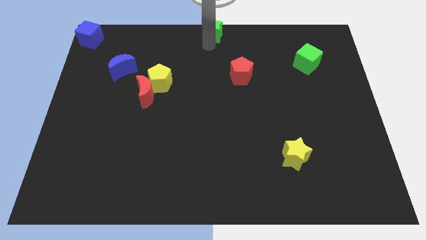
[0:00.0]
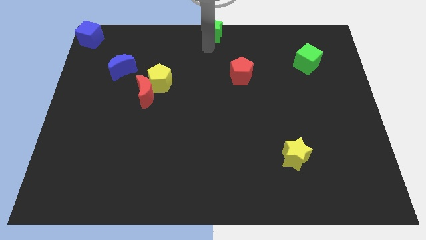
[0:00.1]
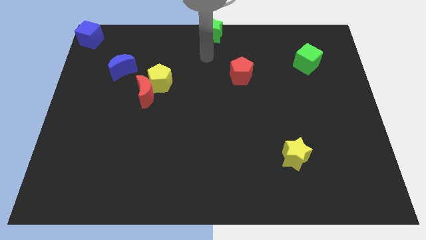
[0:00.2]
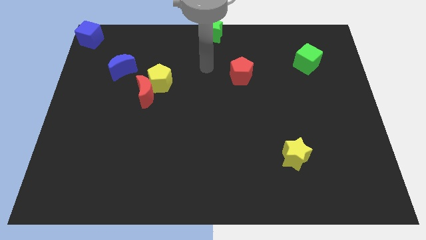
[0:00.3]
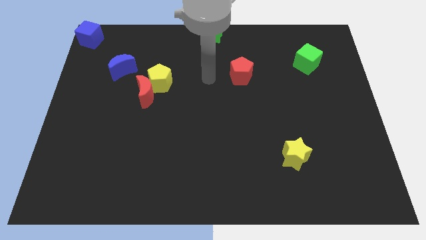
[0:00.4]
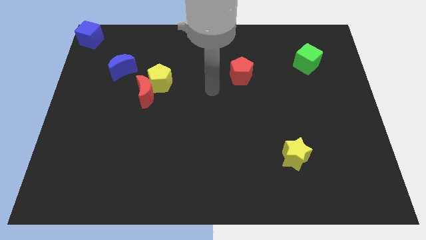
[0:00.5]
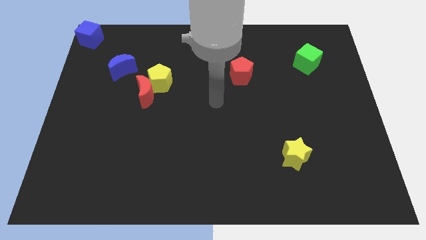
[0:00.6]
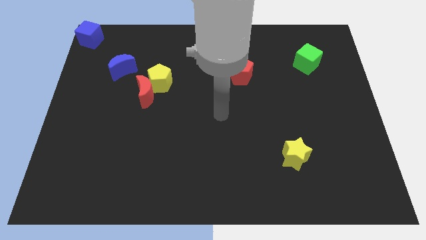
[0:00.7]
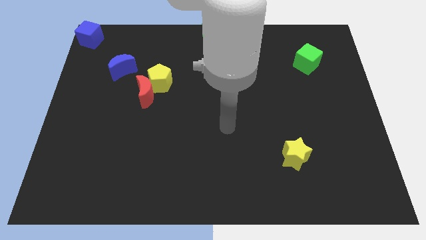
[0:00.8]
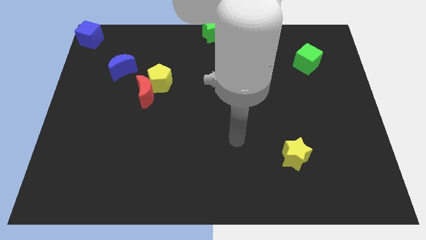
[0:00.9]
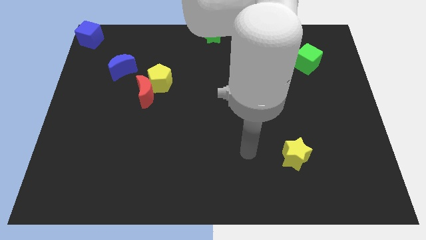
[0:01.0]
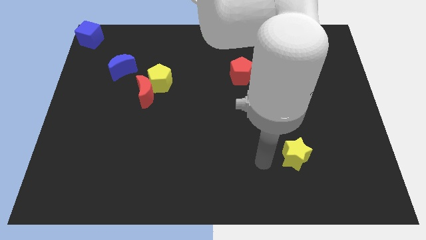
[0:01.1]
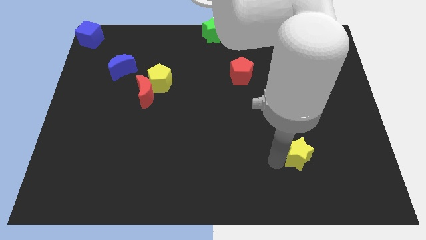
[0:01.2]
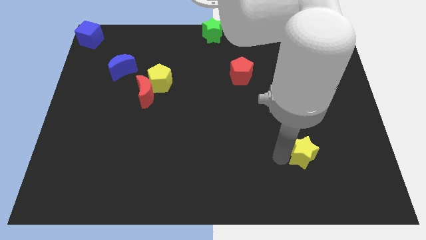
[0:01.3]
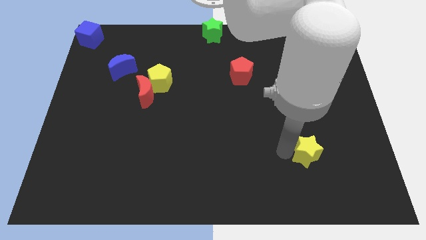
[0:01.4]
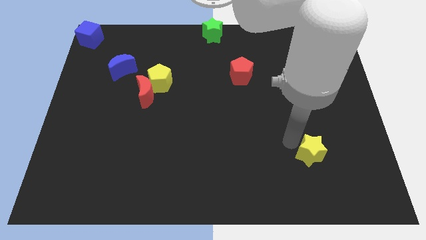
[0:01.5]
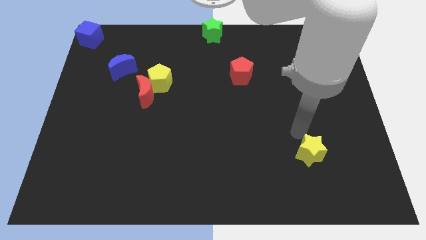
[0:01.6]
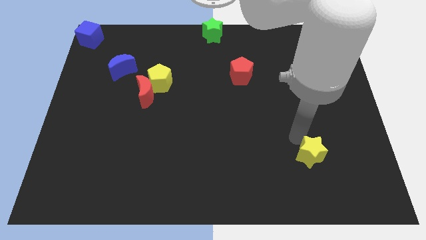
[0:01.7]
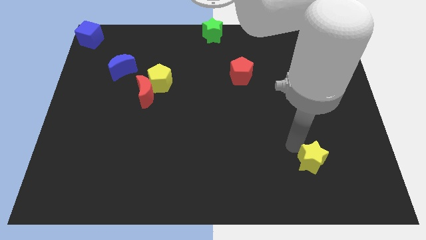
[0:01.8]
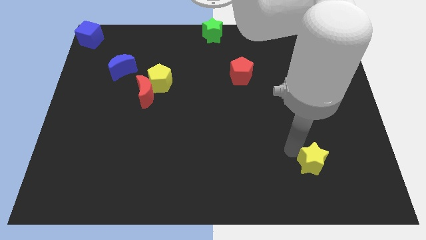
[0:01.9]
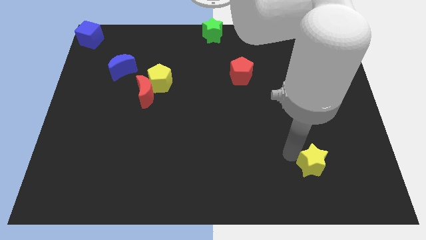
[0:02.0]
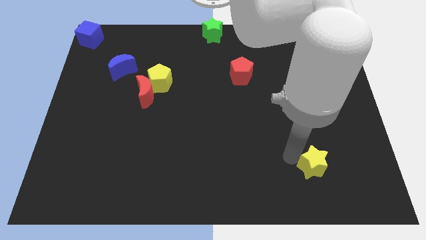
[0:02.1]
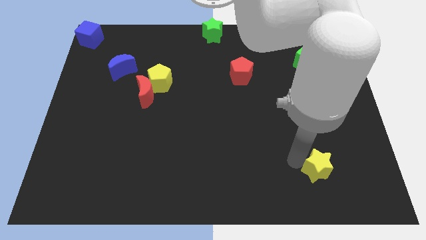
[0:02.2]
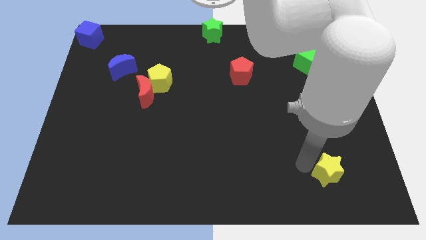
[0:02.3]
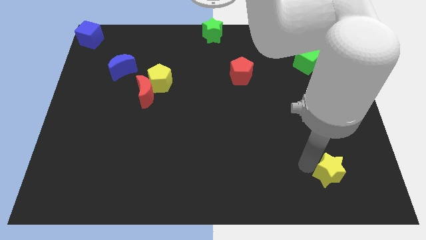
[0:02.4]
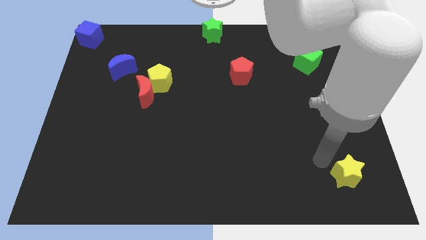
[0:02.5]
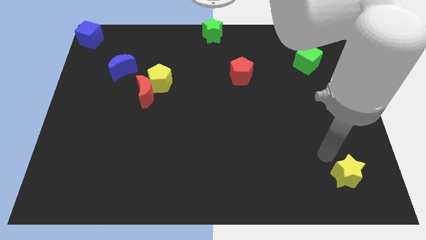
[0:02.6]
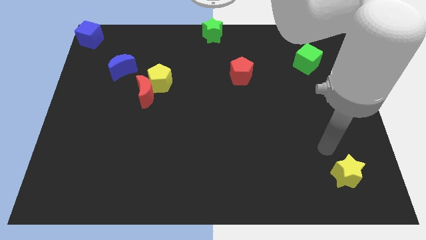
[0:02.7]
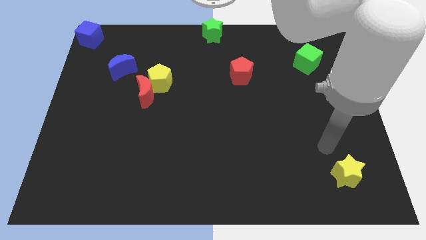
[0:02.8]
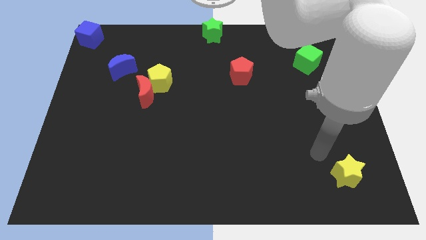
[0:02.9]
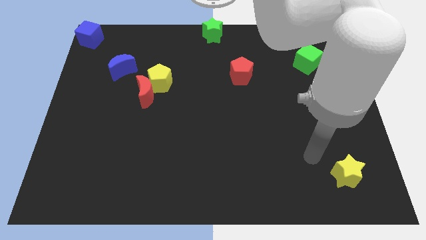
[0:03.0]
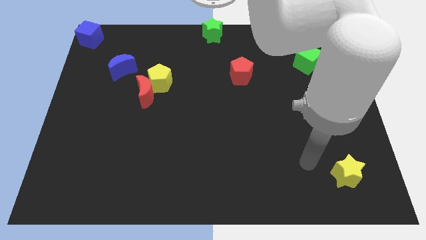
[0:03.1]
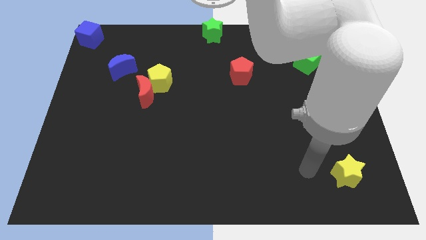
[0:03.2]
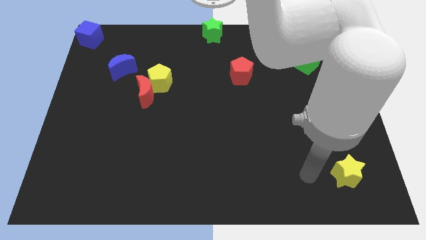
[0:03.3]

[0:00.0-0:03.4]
move your arm left to the yellow star

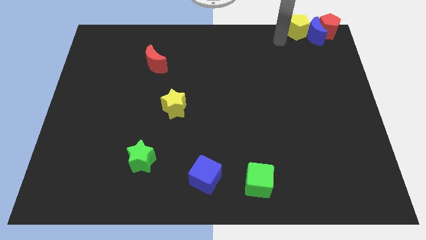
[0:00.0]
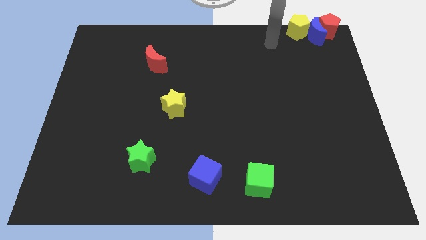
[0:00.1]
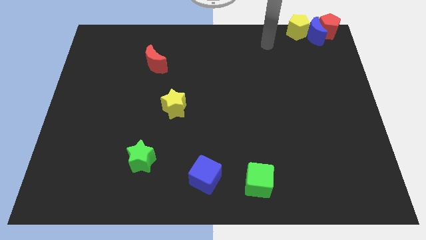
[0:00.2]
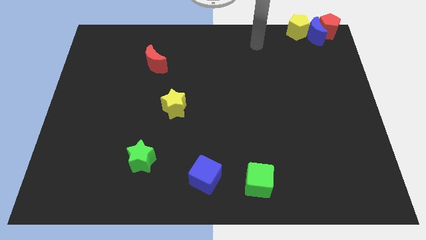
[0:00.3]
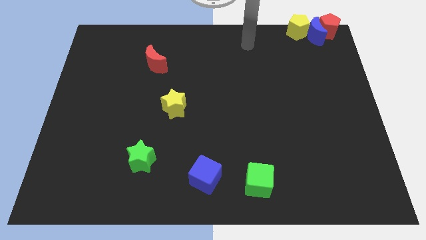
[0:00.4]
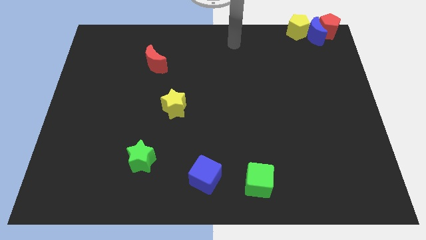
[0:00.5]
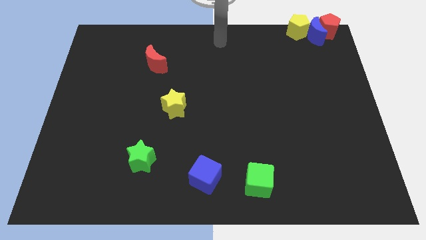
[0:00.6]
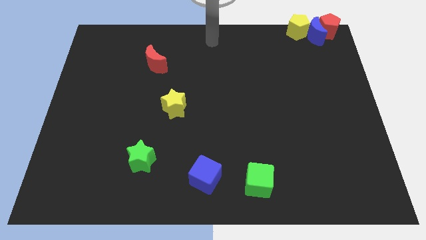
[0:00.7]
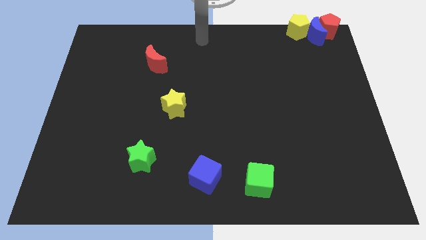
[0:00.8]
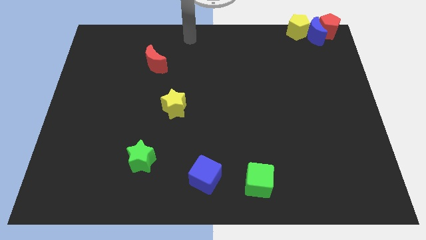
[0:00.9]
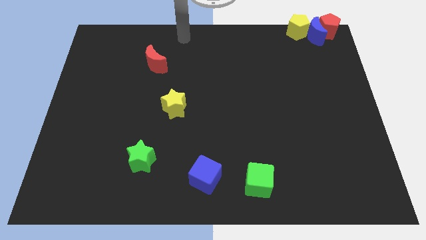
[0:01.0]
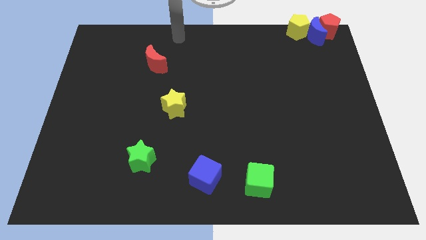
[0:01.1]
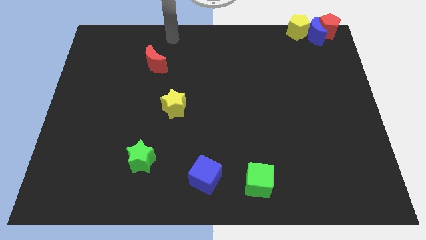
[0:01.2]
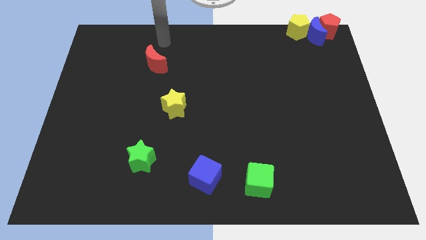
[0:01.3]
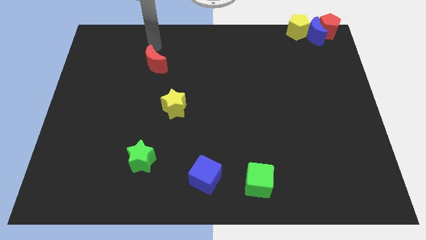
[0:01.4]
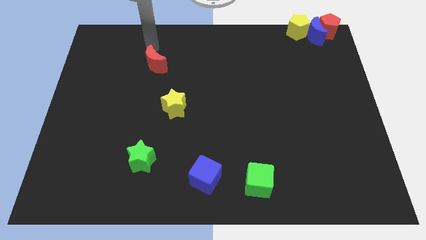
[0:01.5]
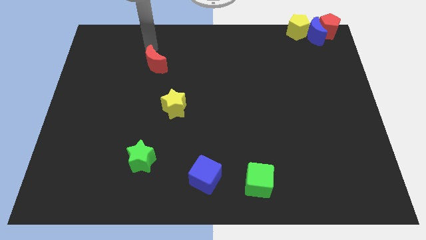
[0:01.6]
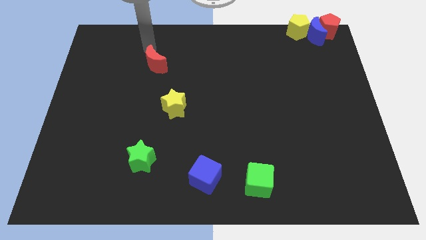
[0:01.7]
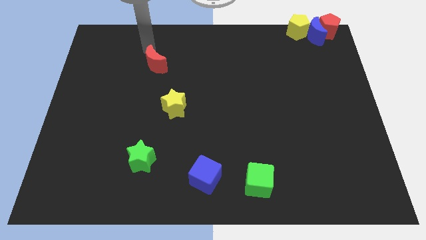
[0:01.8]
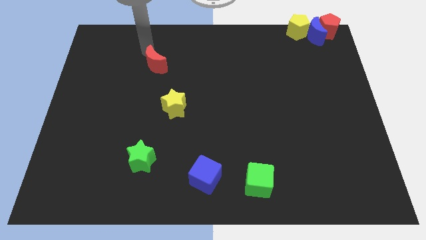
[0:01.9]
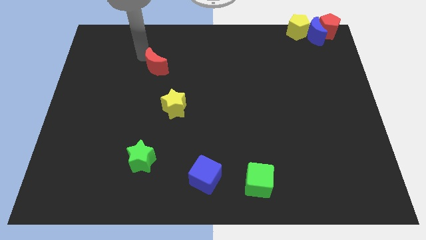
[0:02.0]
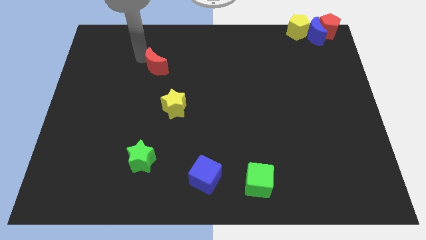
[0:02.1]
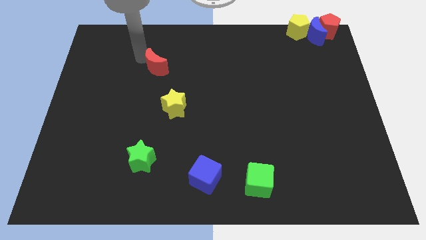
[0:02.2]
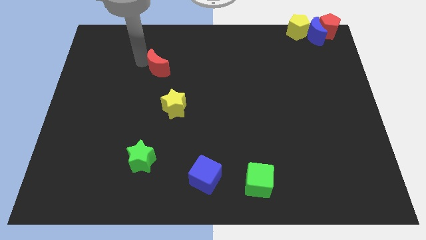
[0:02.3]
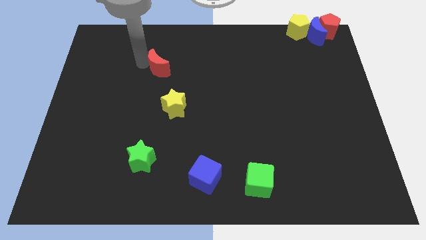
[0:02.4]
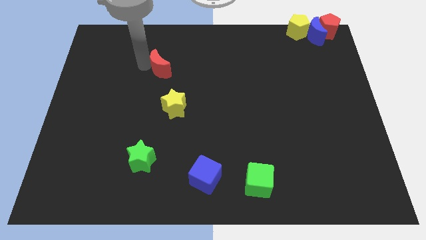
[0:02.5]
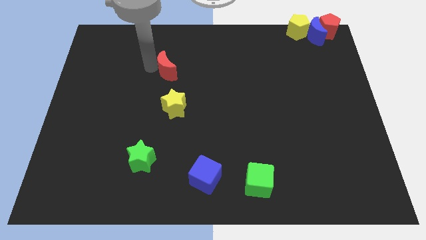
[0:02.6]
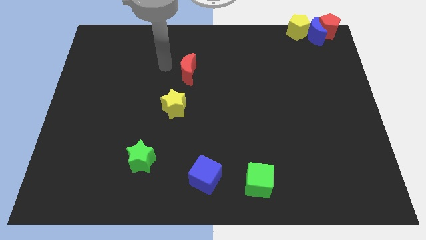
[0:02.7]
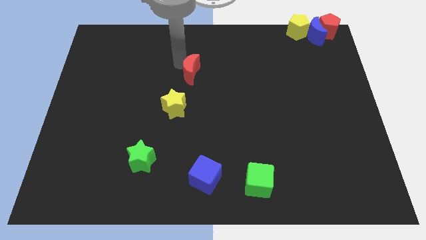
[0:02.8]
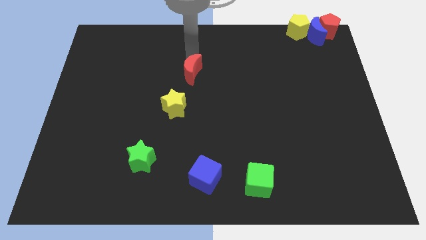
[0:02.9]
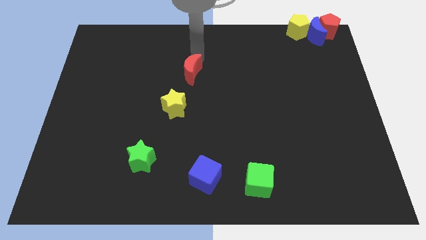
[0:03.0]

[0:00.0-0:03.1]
slide red moon to the top right of yellow star

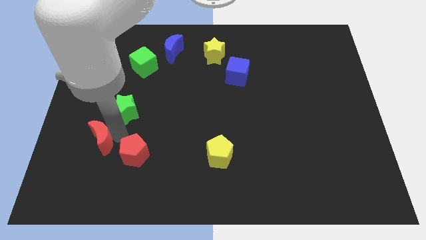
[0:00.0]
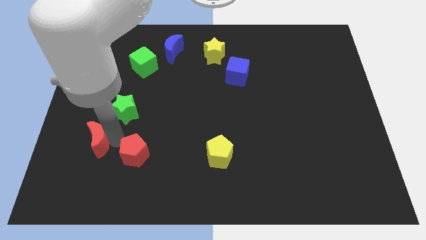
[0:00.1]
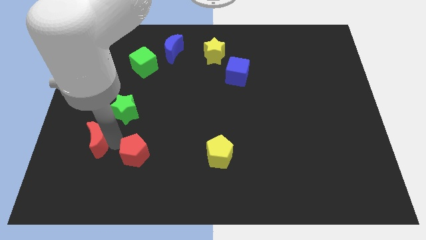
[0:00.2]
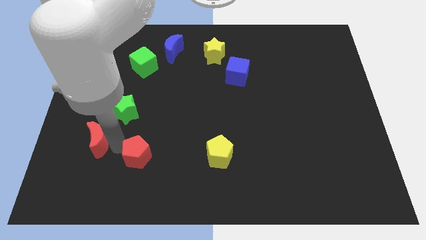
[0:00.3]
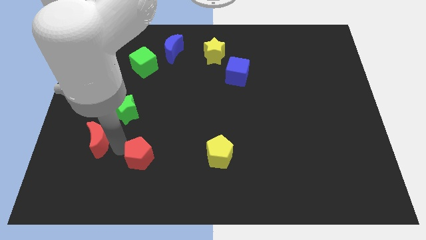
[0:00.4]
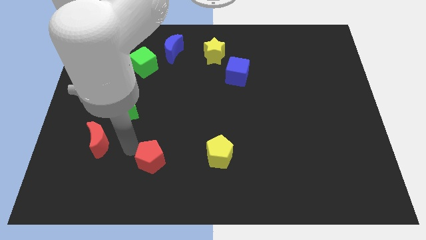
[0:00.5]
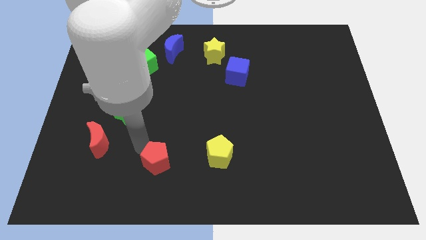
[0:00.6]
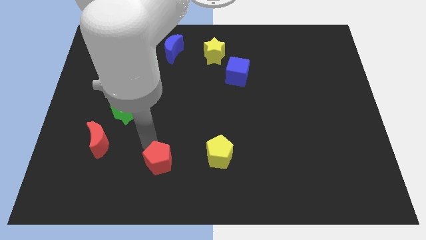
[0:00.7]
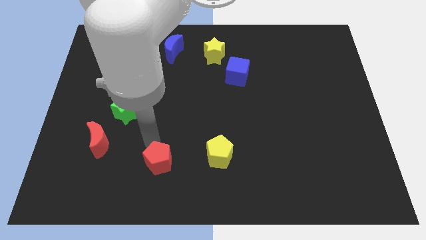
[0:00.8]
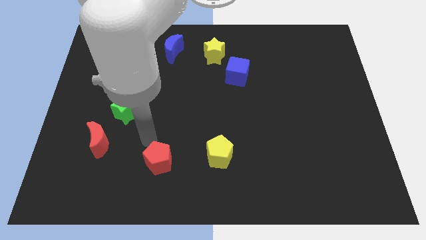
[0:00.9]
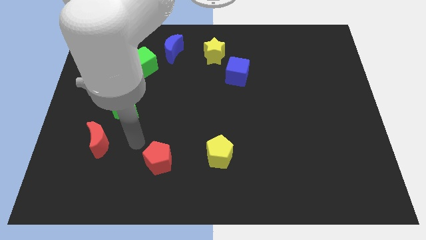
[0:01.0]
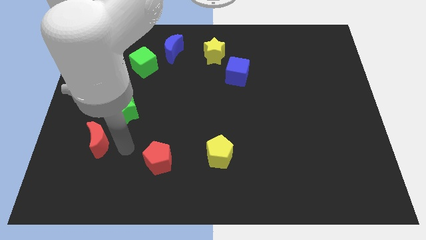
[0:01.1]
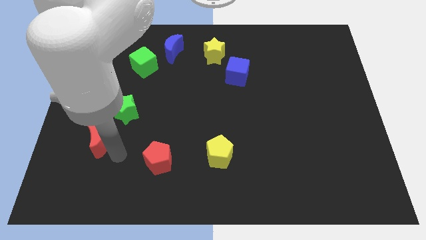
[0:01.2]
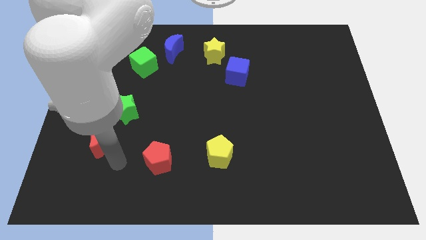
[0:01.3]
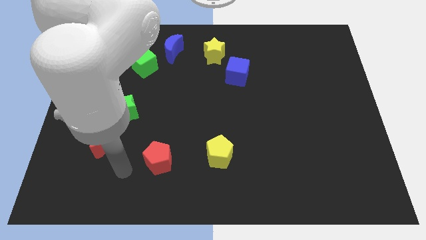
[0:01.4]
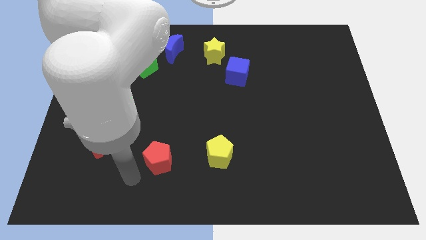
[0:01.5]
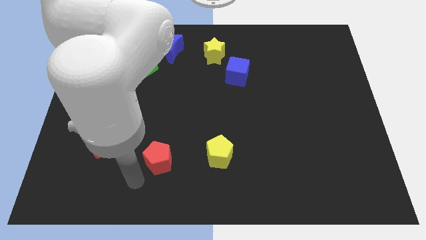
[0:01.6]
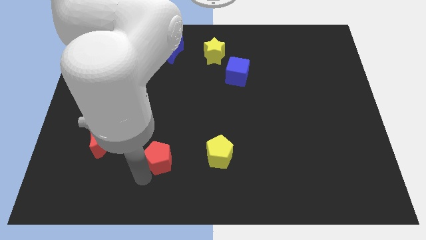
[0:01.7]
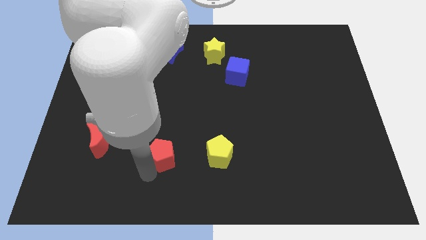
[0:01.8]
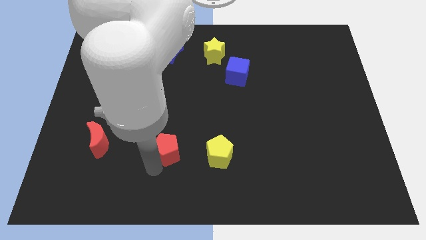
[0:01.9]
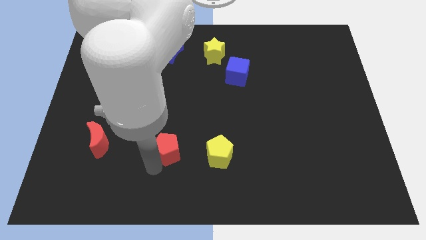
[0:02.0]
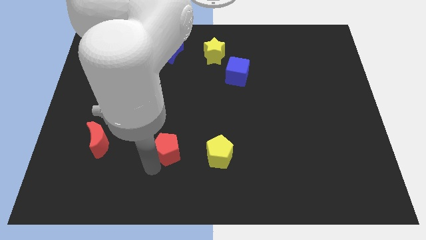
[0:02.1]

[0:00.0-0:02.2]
place red pentagon to the left of yellow pentagon

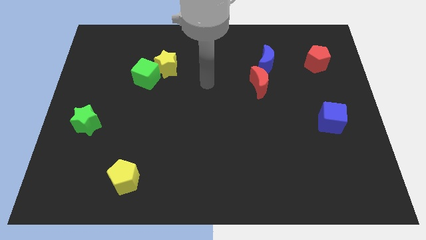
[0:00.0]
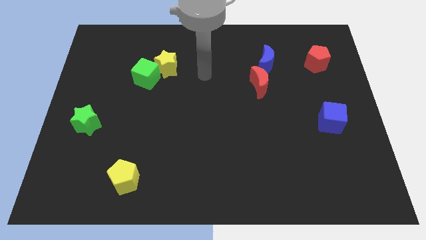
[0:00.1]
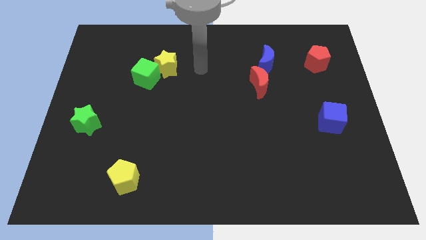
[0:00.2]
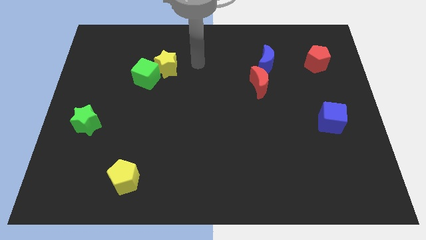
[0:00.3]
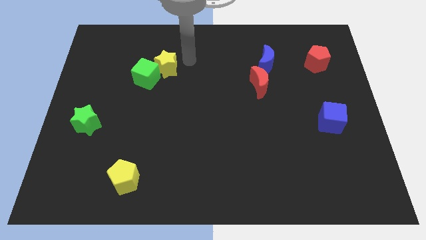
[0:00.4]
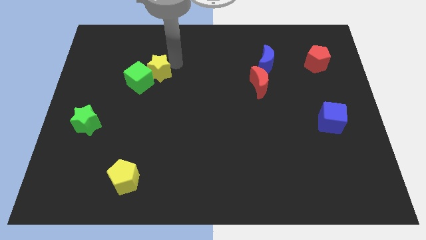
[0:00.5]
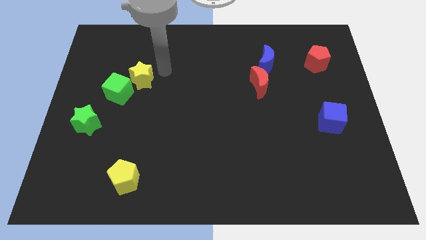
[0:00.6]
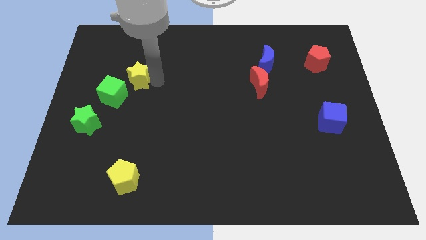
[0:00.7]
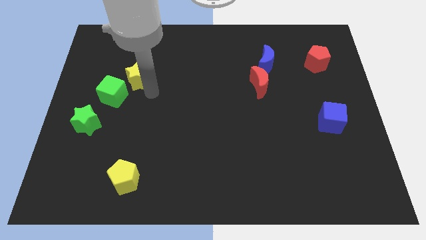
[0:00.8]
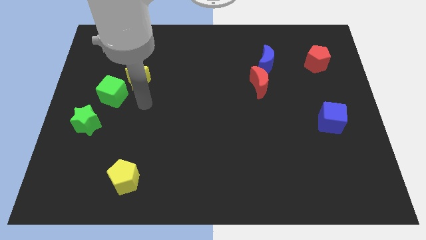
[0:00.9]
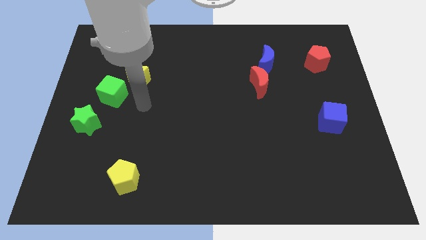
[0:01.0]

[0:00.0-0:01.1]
move the yellow star away from the green cube
